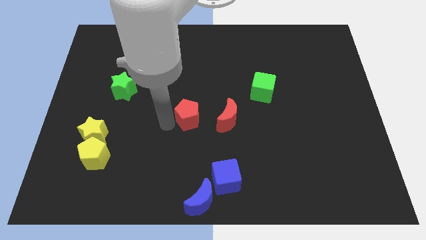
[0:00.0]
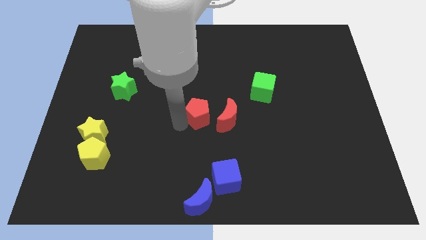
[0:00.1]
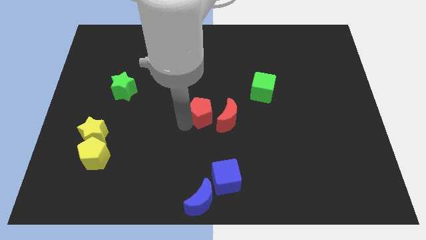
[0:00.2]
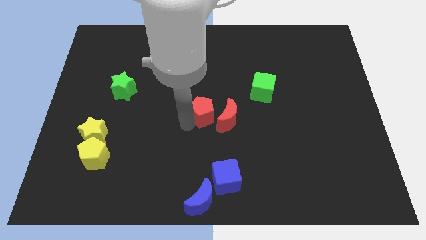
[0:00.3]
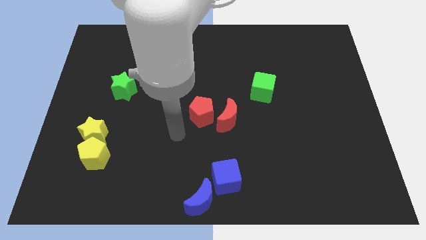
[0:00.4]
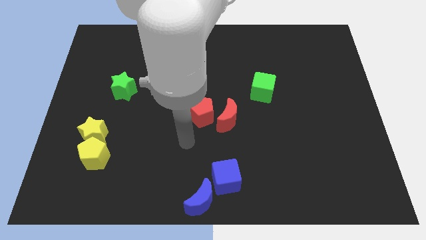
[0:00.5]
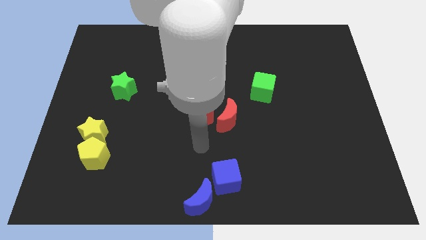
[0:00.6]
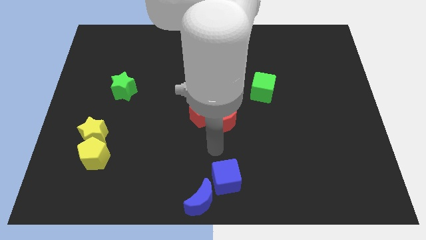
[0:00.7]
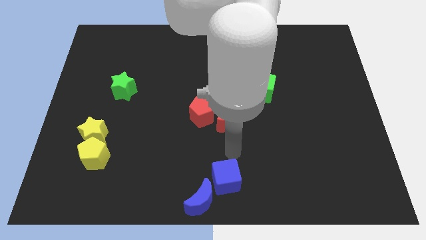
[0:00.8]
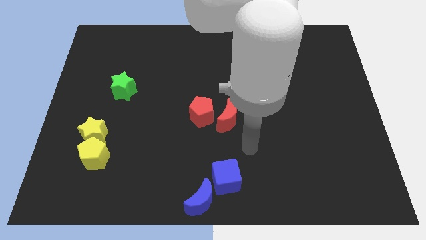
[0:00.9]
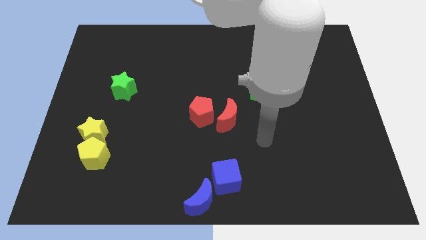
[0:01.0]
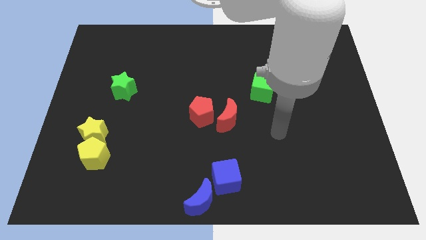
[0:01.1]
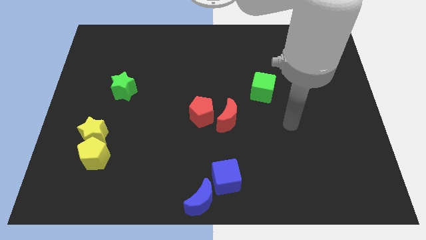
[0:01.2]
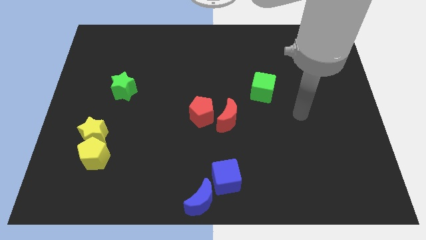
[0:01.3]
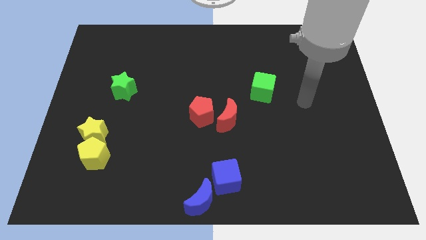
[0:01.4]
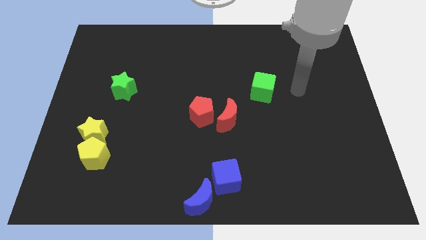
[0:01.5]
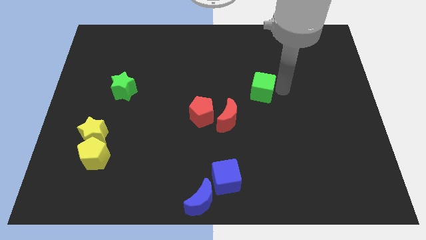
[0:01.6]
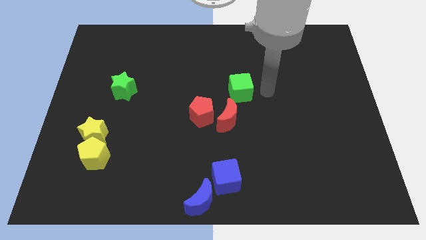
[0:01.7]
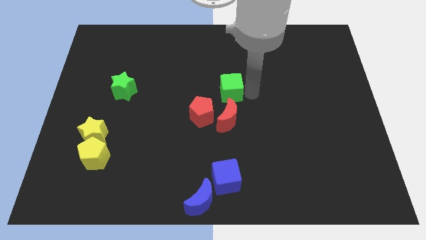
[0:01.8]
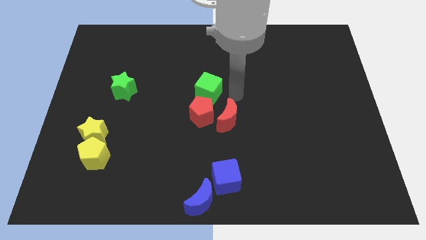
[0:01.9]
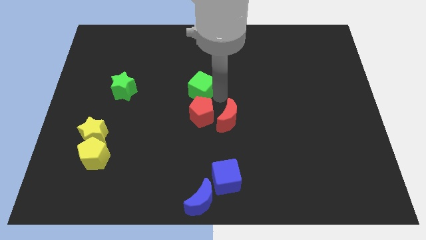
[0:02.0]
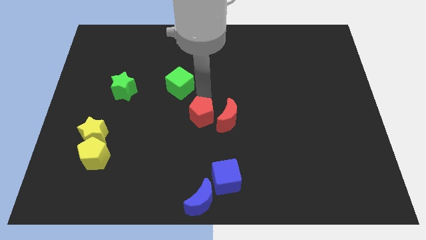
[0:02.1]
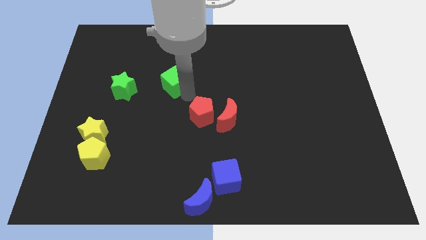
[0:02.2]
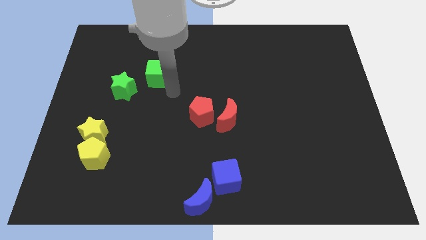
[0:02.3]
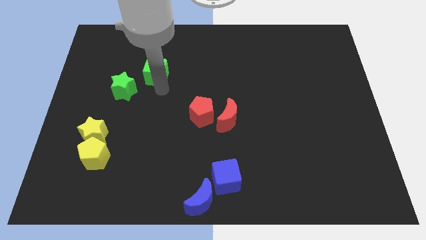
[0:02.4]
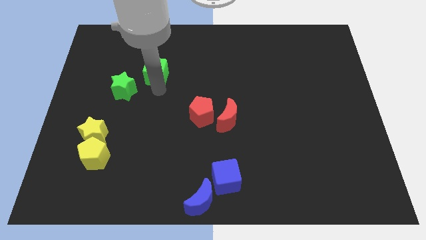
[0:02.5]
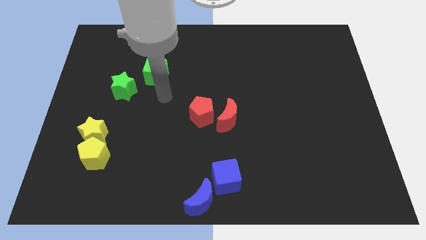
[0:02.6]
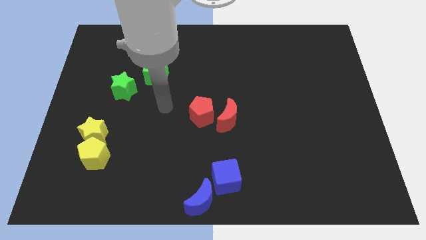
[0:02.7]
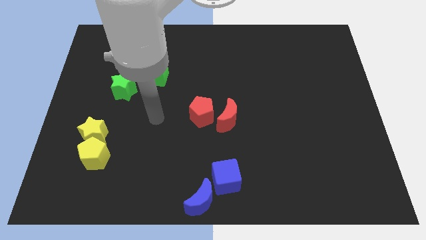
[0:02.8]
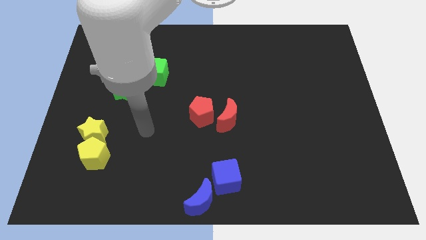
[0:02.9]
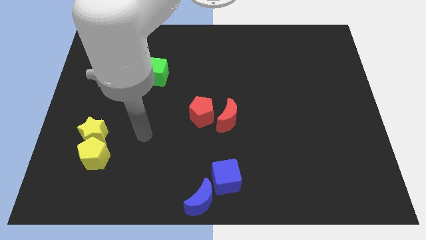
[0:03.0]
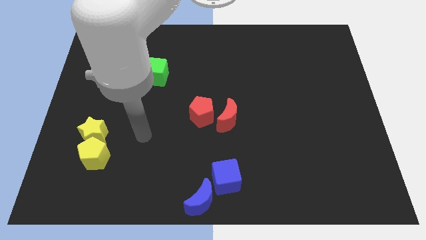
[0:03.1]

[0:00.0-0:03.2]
slide the green cube into green star

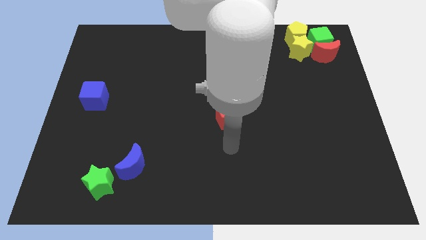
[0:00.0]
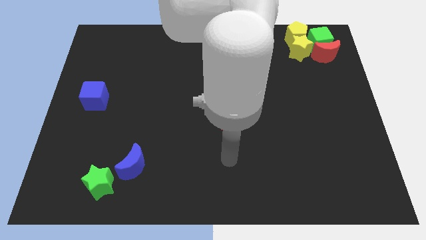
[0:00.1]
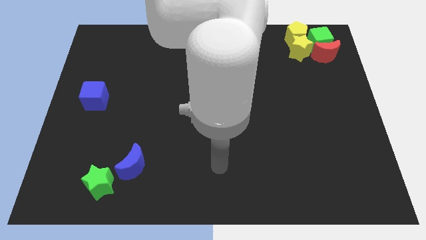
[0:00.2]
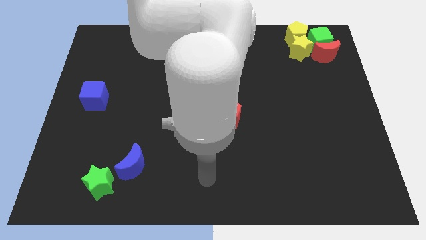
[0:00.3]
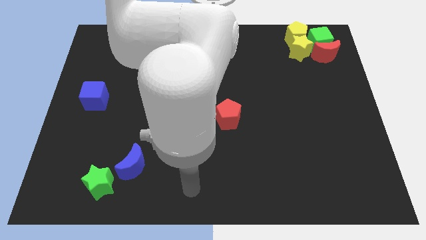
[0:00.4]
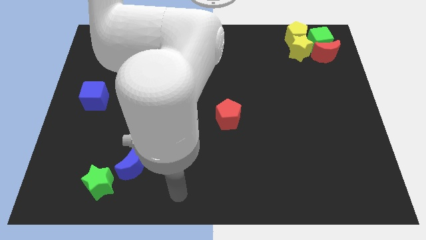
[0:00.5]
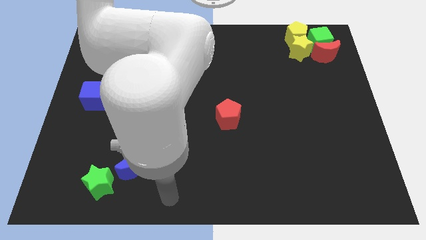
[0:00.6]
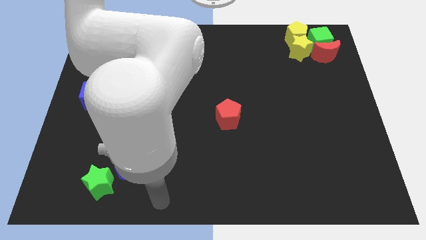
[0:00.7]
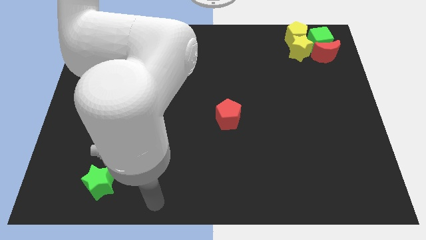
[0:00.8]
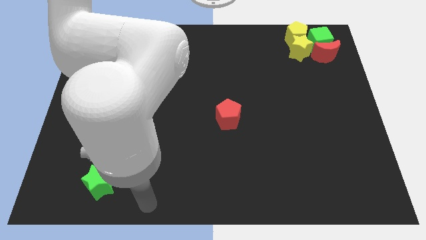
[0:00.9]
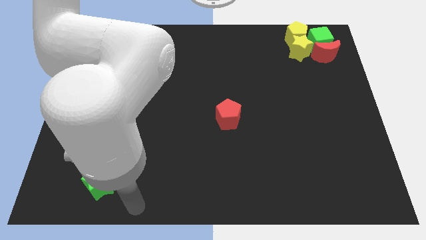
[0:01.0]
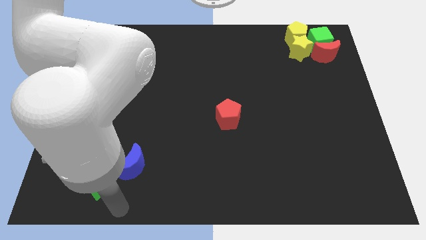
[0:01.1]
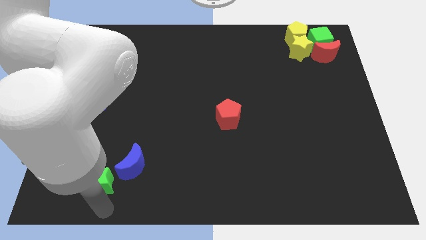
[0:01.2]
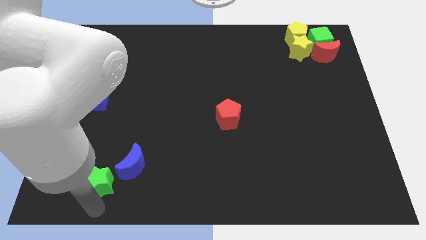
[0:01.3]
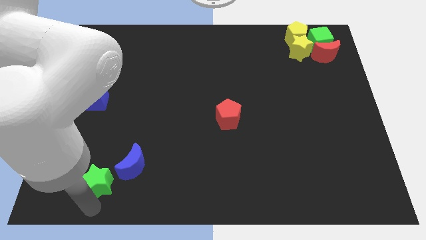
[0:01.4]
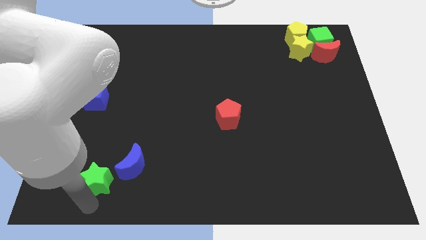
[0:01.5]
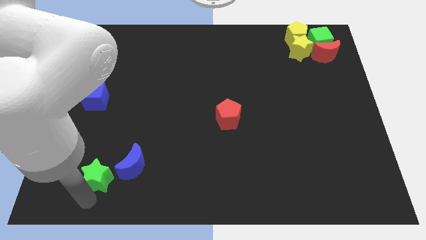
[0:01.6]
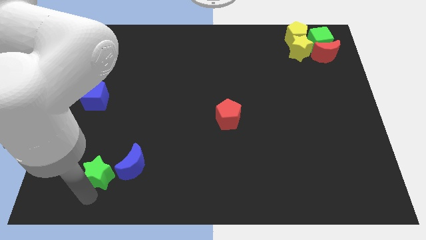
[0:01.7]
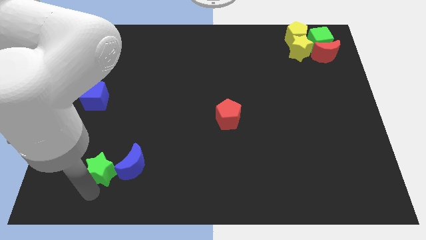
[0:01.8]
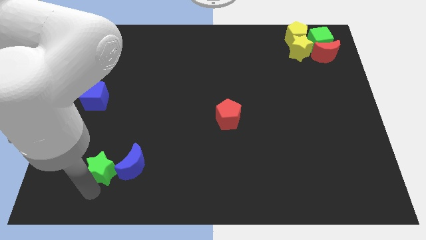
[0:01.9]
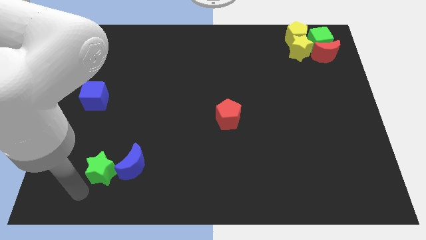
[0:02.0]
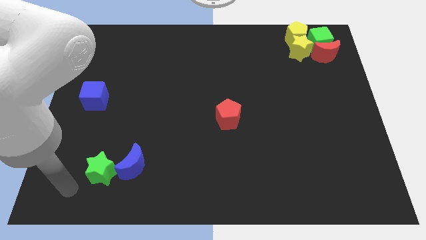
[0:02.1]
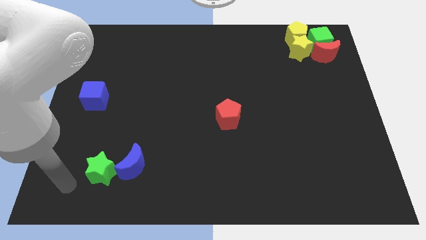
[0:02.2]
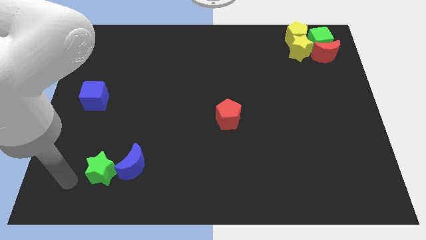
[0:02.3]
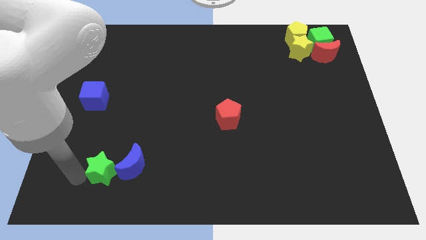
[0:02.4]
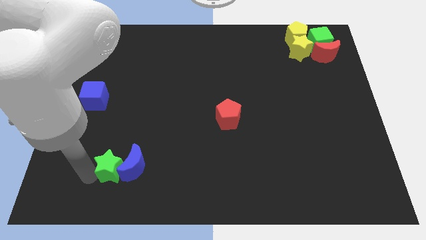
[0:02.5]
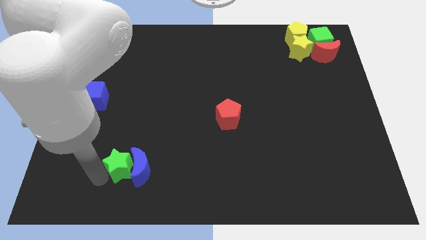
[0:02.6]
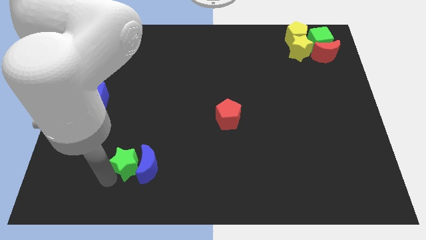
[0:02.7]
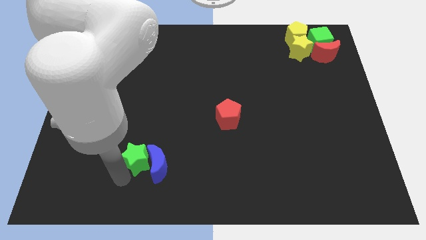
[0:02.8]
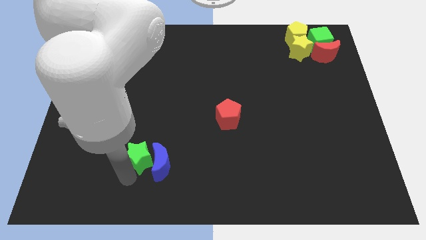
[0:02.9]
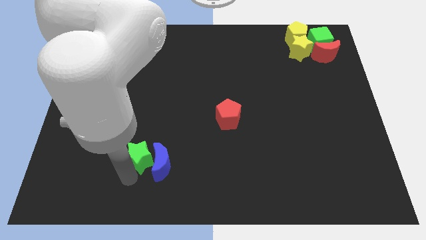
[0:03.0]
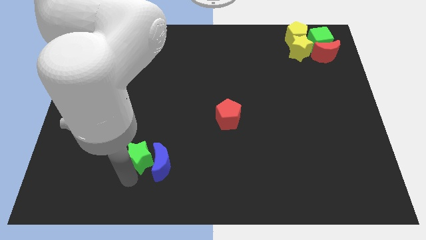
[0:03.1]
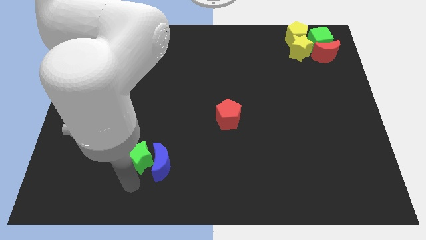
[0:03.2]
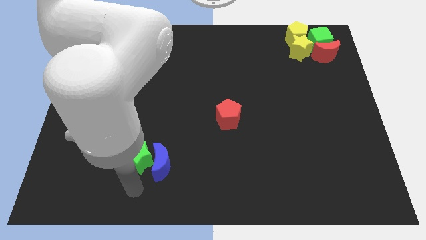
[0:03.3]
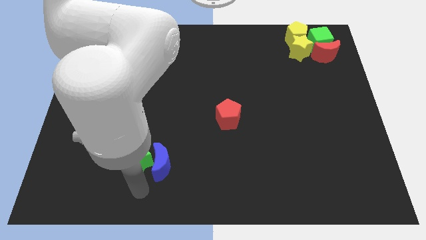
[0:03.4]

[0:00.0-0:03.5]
push the green star into the blue crescent

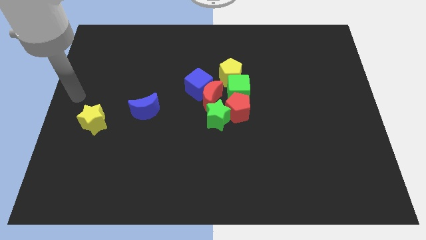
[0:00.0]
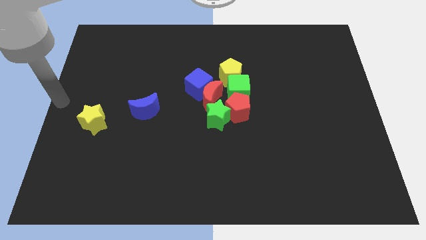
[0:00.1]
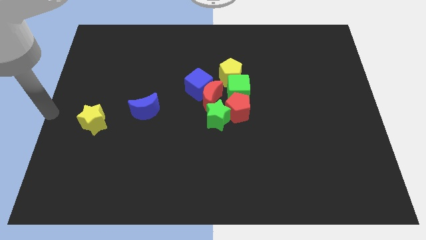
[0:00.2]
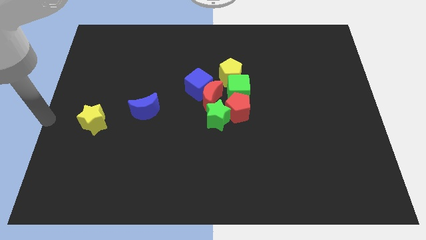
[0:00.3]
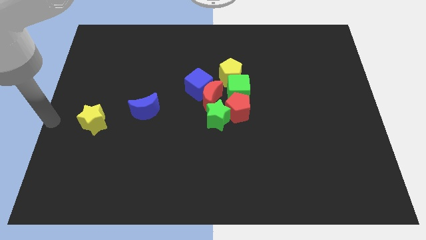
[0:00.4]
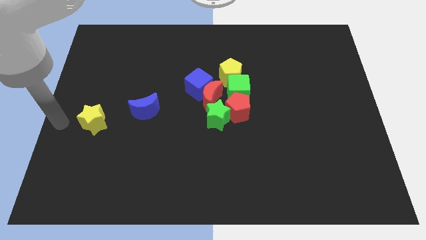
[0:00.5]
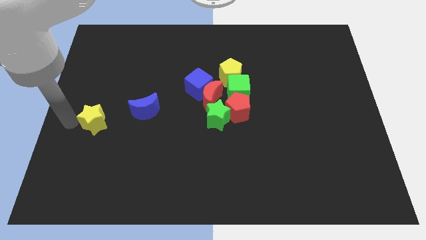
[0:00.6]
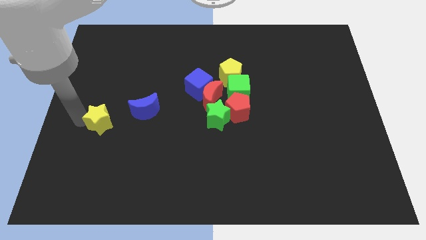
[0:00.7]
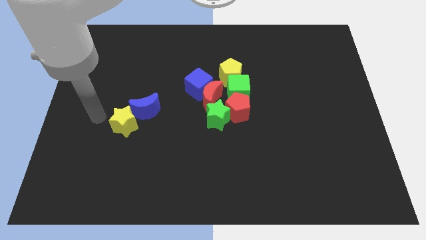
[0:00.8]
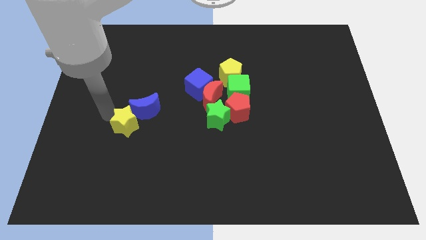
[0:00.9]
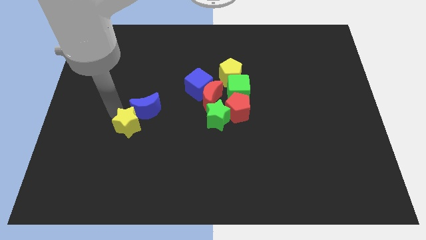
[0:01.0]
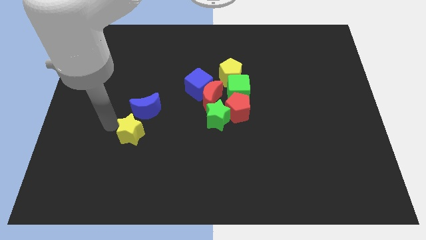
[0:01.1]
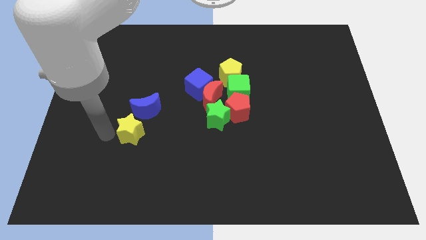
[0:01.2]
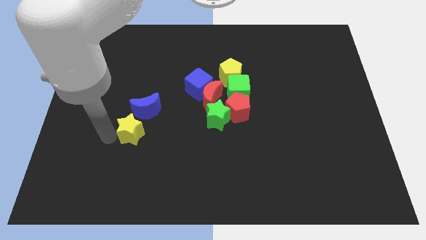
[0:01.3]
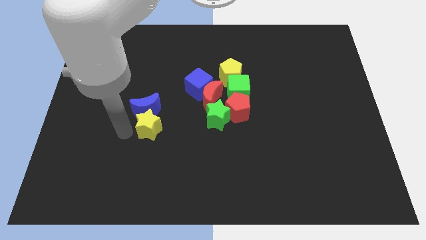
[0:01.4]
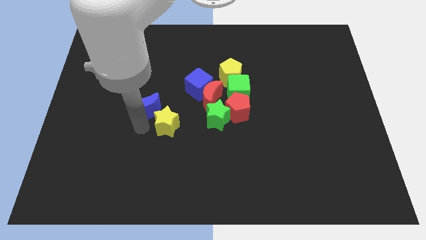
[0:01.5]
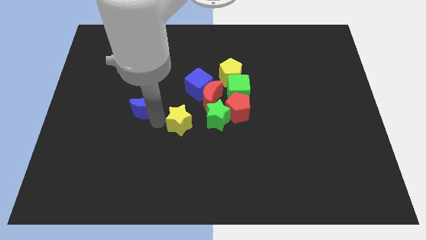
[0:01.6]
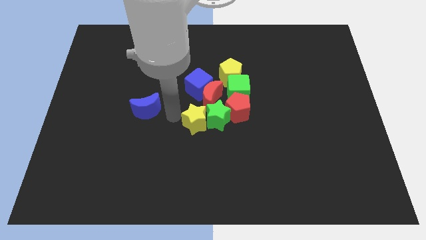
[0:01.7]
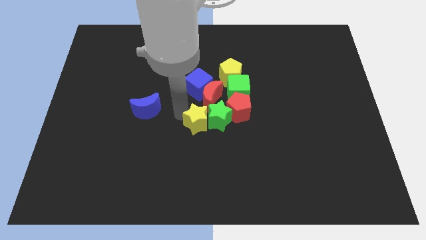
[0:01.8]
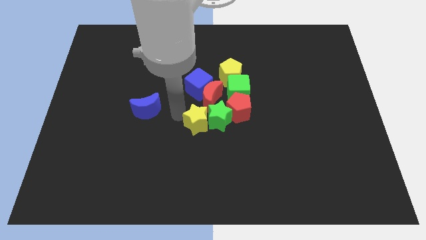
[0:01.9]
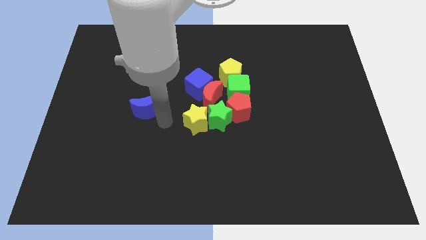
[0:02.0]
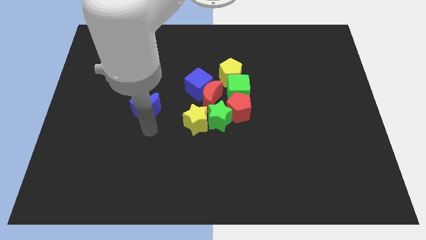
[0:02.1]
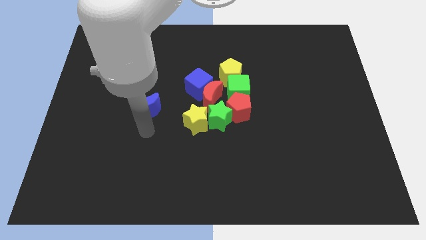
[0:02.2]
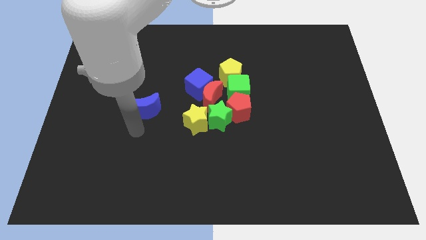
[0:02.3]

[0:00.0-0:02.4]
move the yellow star to the left of green star at the center of the board
